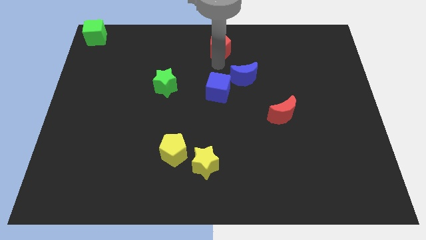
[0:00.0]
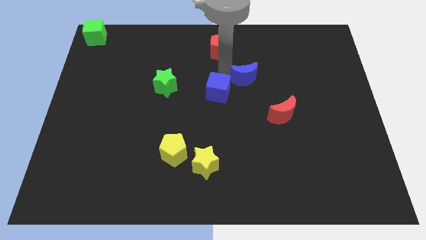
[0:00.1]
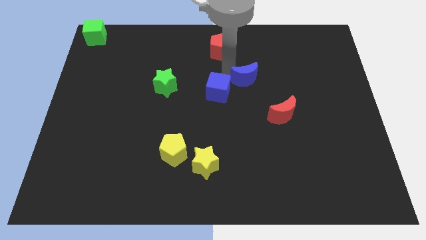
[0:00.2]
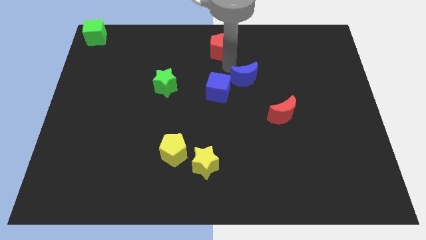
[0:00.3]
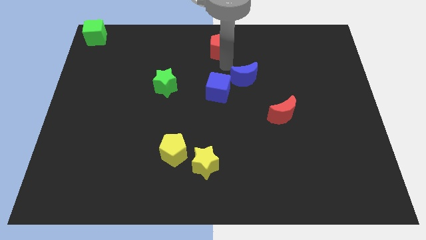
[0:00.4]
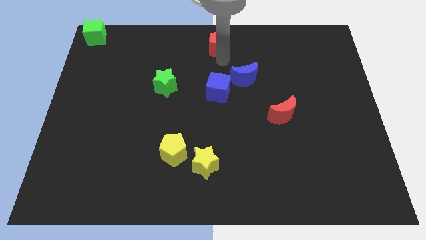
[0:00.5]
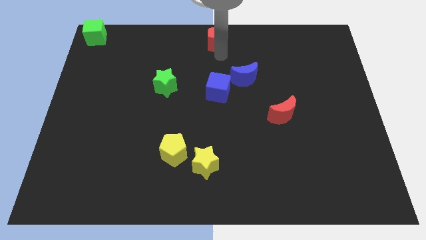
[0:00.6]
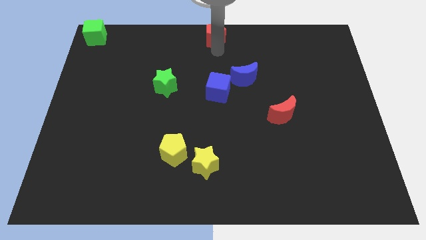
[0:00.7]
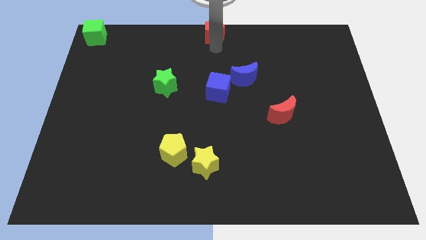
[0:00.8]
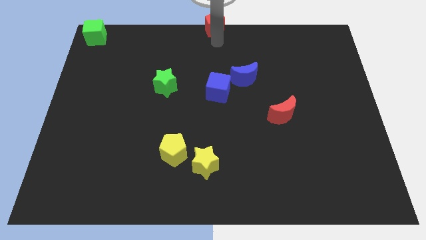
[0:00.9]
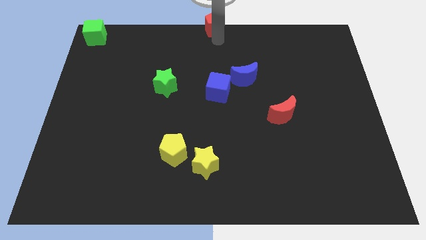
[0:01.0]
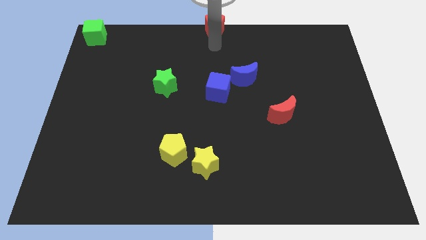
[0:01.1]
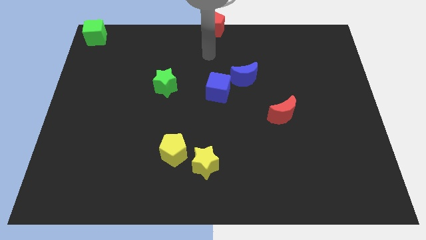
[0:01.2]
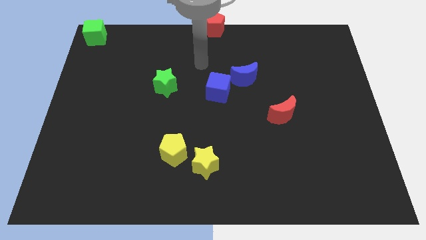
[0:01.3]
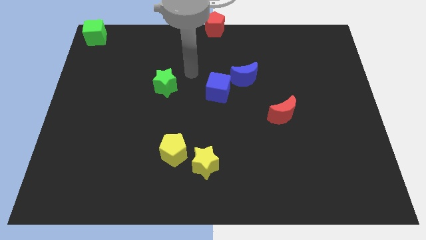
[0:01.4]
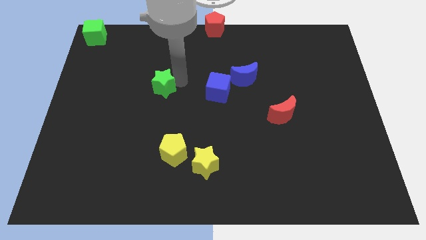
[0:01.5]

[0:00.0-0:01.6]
place the red pentagon in the top middle

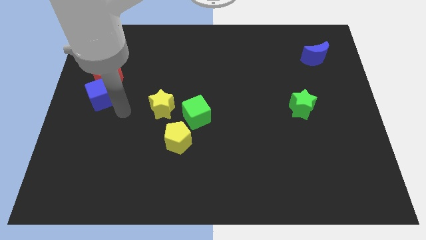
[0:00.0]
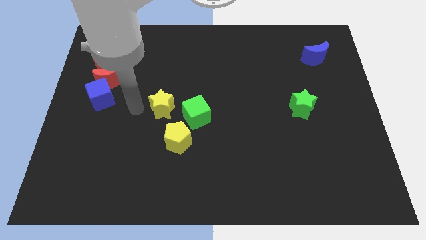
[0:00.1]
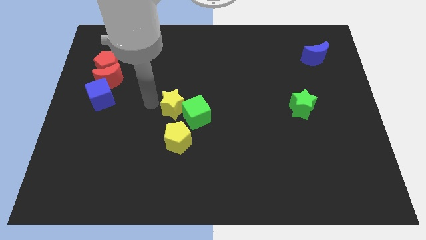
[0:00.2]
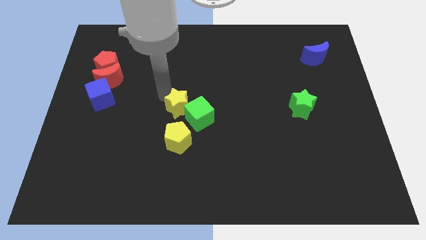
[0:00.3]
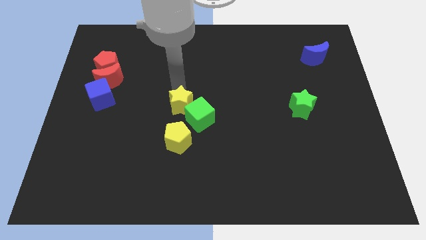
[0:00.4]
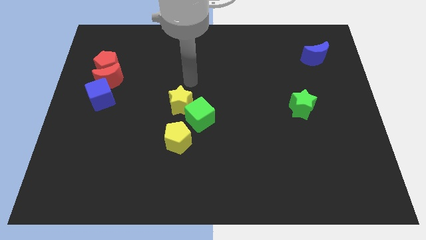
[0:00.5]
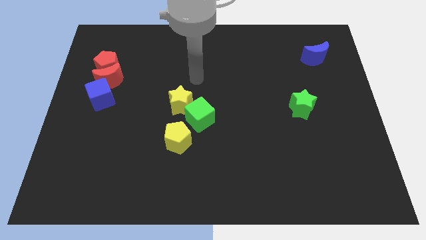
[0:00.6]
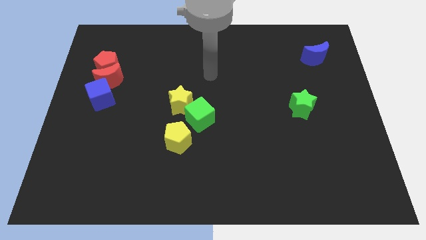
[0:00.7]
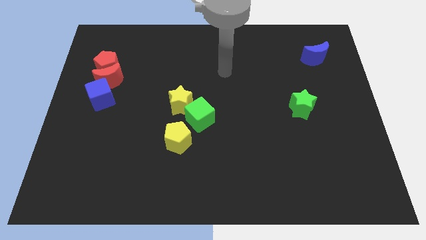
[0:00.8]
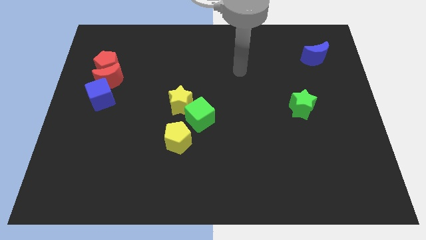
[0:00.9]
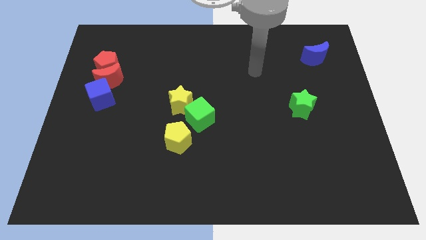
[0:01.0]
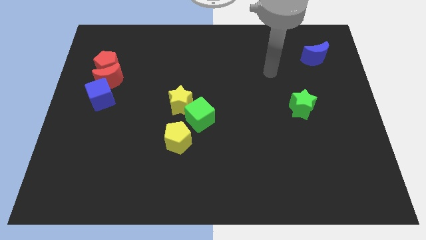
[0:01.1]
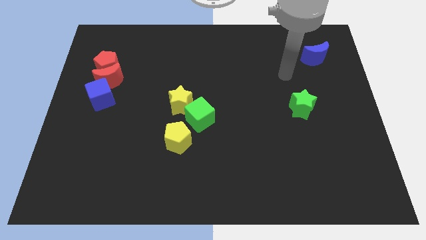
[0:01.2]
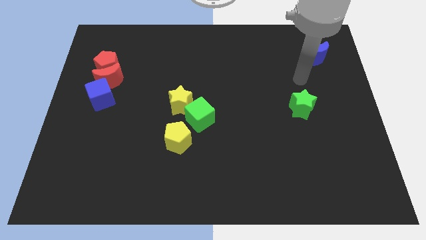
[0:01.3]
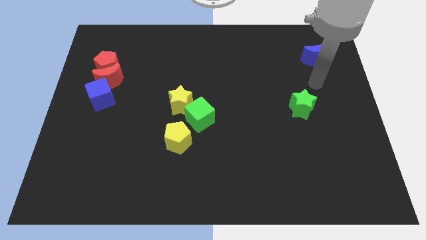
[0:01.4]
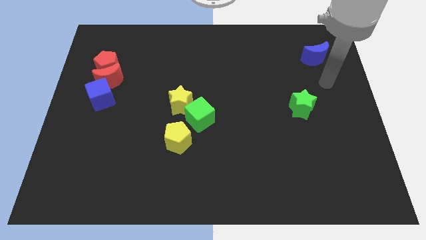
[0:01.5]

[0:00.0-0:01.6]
move your arm away from the blue block

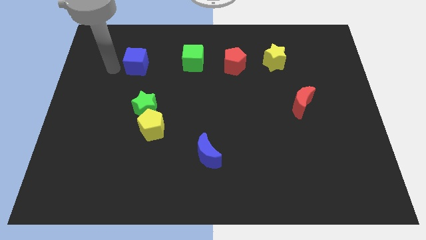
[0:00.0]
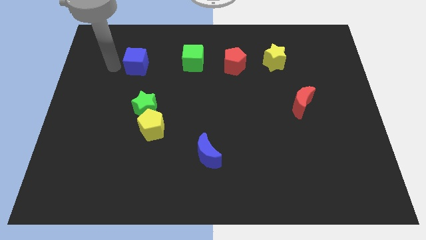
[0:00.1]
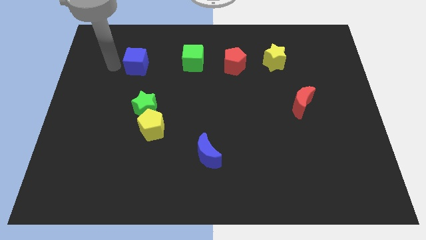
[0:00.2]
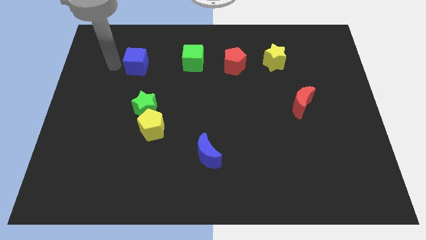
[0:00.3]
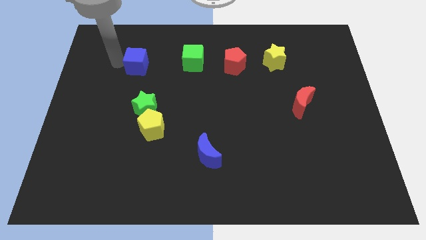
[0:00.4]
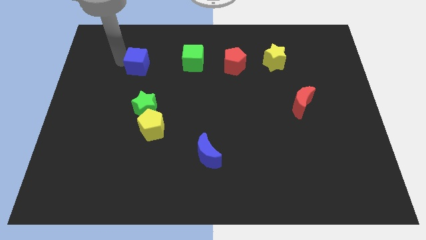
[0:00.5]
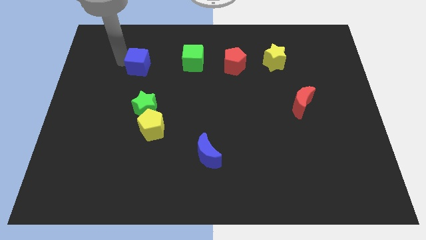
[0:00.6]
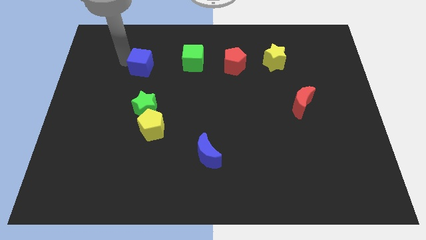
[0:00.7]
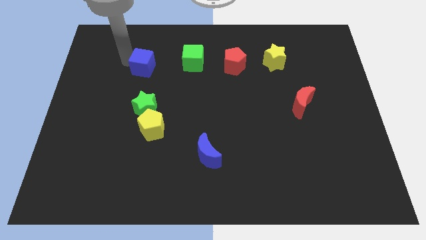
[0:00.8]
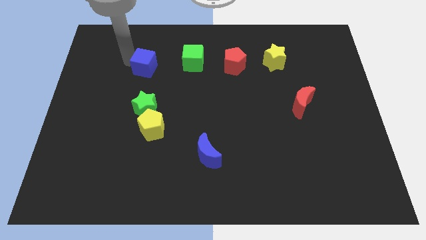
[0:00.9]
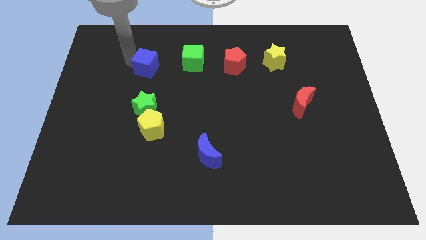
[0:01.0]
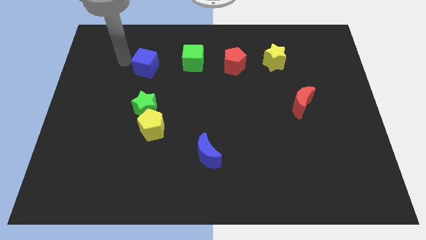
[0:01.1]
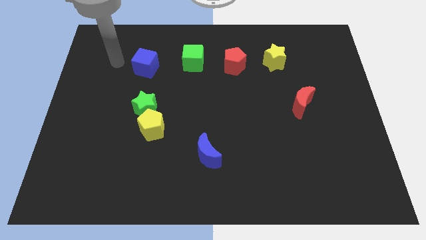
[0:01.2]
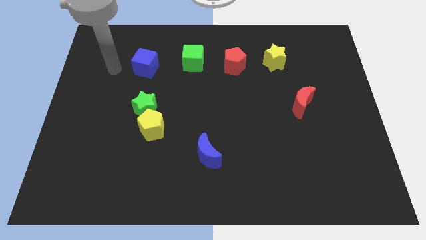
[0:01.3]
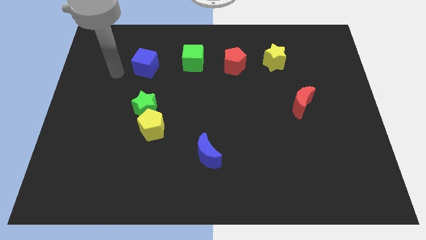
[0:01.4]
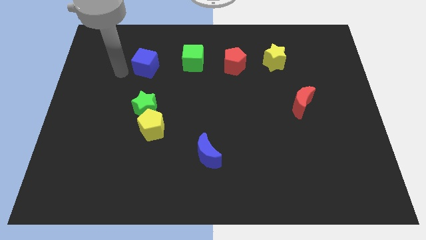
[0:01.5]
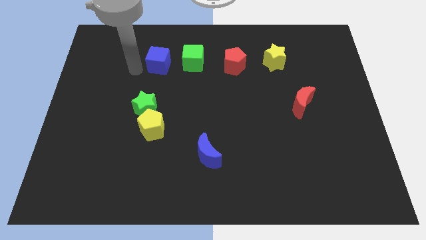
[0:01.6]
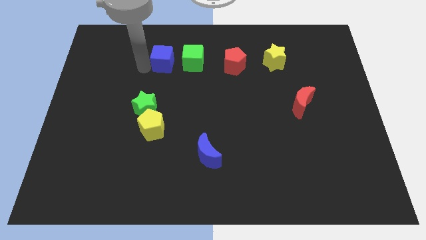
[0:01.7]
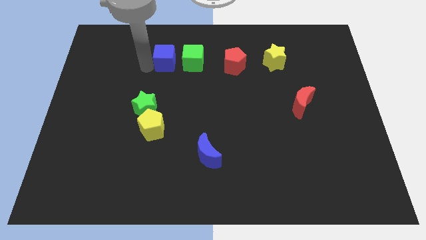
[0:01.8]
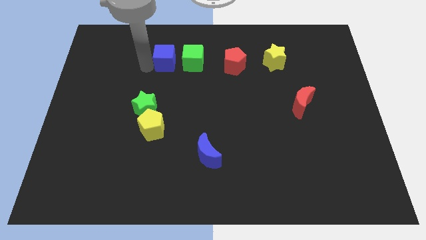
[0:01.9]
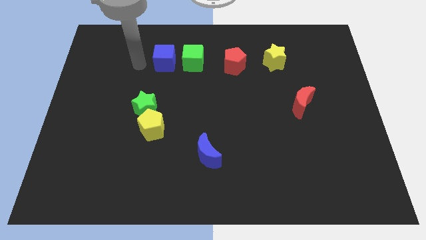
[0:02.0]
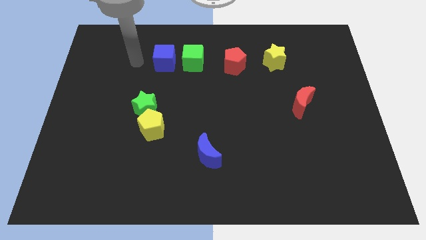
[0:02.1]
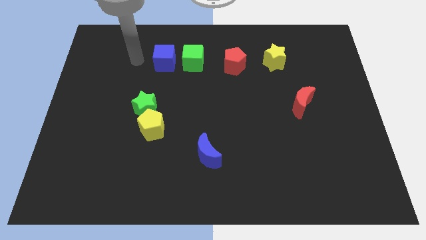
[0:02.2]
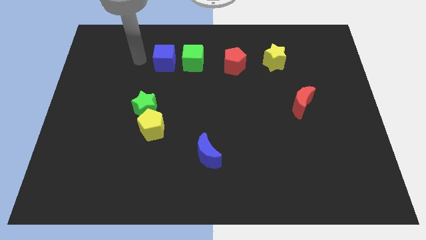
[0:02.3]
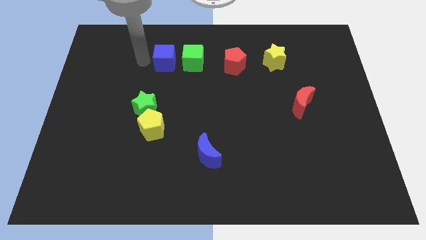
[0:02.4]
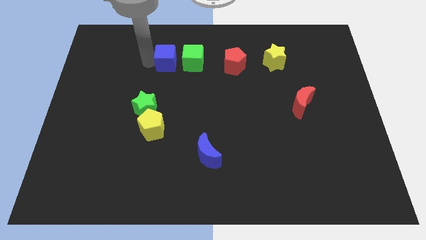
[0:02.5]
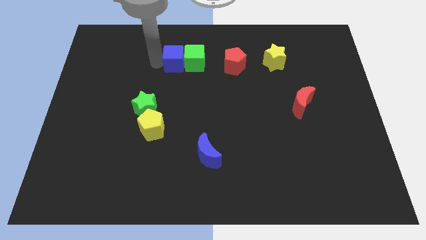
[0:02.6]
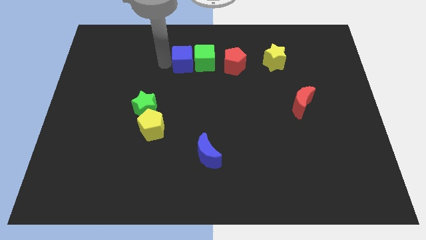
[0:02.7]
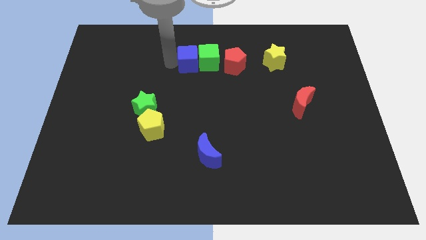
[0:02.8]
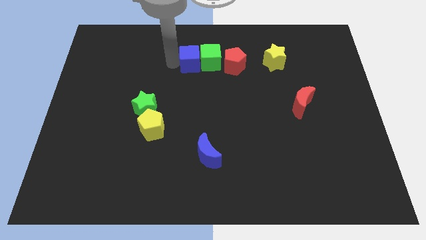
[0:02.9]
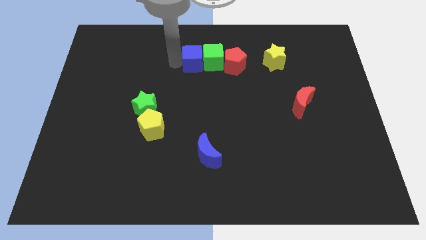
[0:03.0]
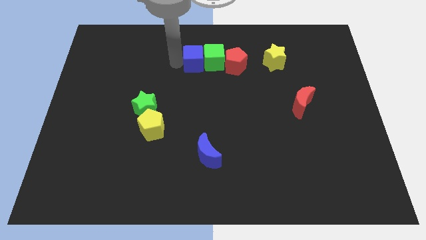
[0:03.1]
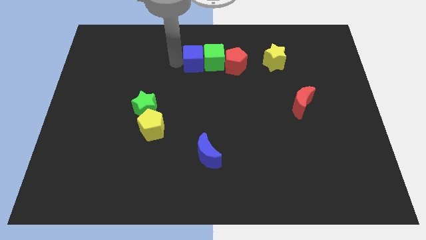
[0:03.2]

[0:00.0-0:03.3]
push the blue cube into the green cube

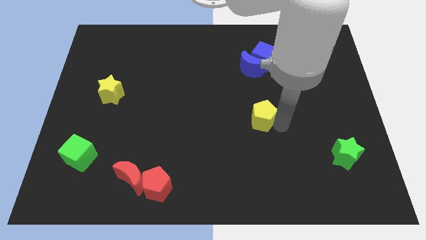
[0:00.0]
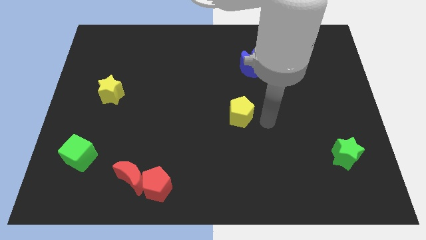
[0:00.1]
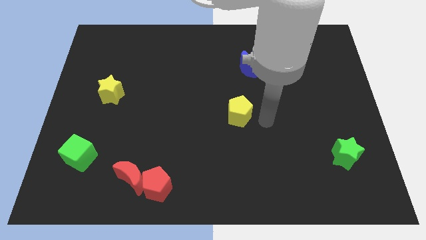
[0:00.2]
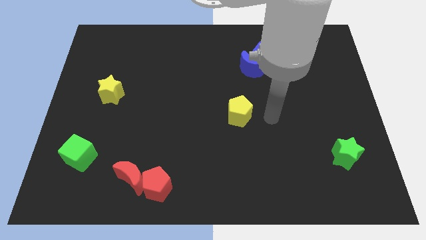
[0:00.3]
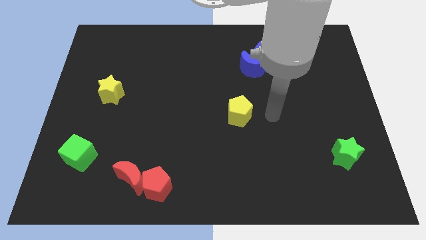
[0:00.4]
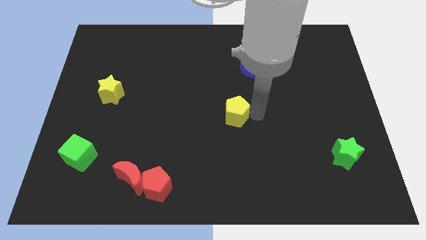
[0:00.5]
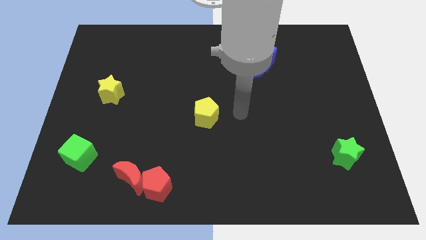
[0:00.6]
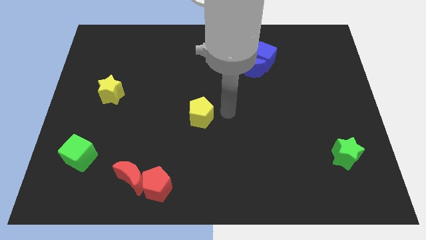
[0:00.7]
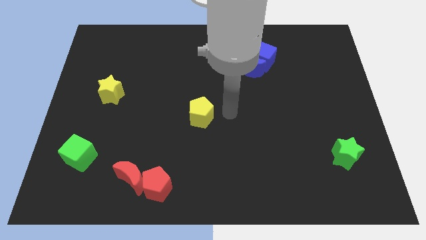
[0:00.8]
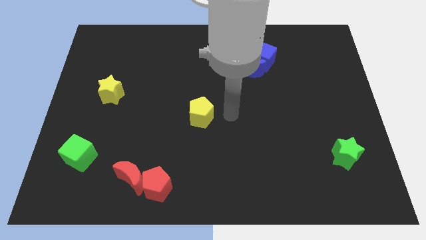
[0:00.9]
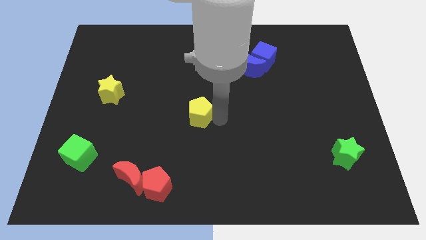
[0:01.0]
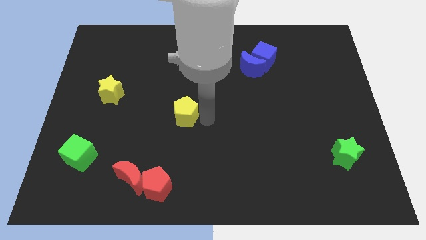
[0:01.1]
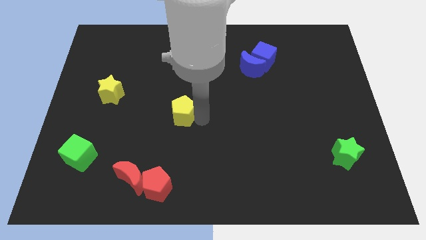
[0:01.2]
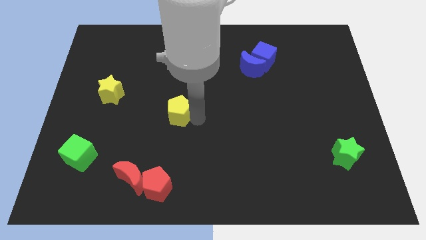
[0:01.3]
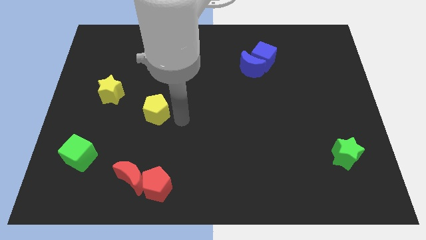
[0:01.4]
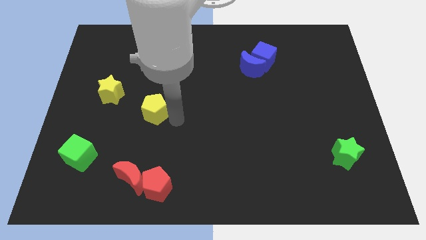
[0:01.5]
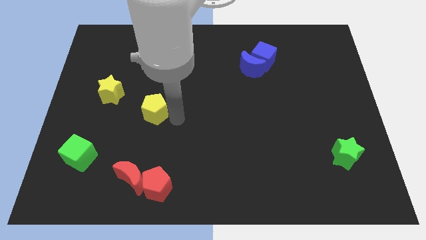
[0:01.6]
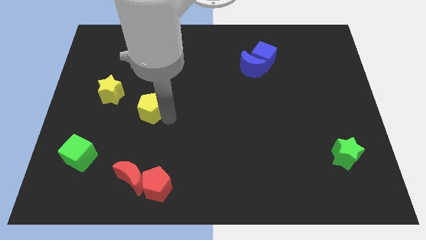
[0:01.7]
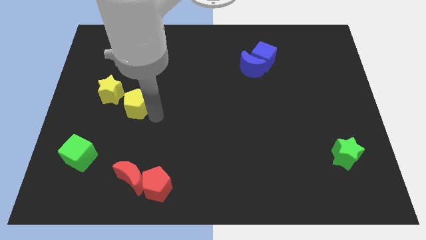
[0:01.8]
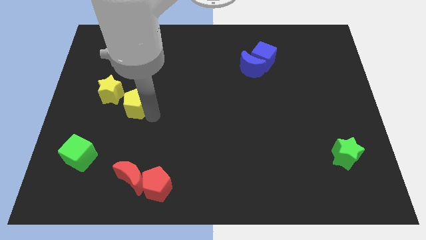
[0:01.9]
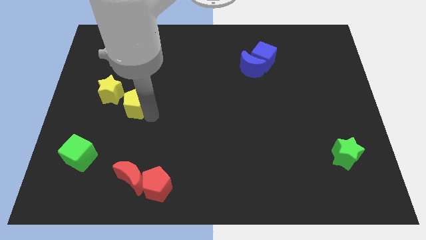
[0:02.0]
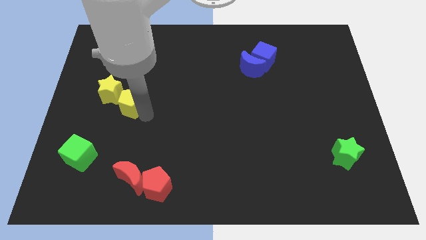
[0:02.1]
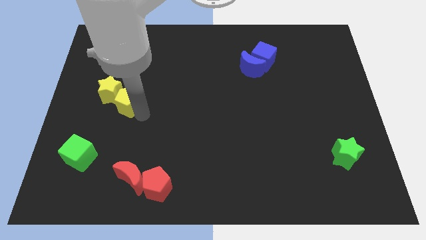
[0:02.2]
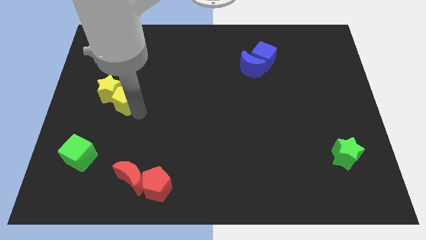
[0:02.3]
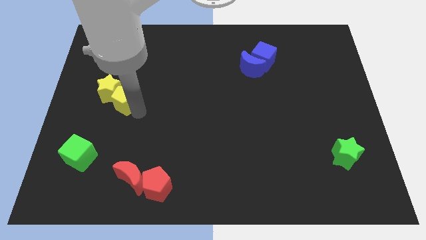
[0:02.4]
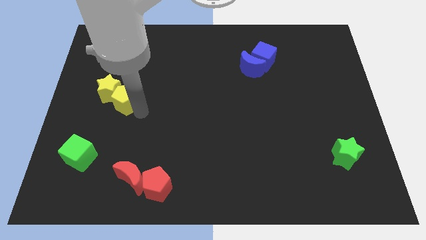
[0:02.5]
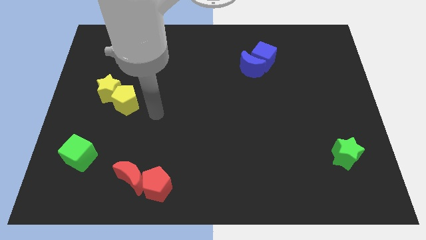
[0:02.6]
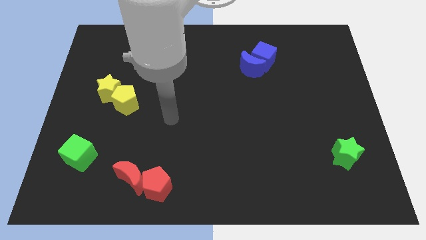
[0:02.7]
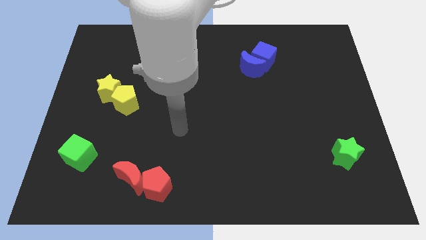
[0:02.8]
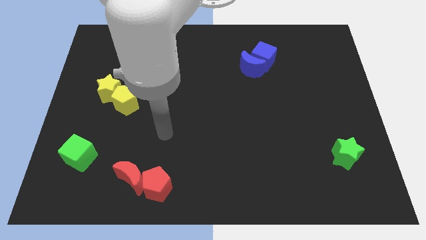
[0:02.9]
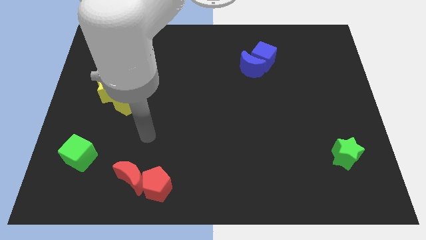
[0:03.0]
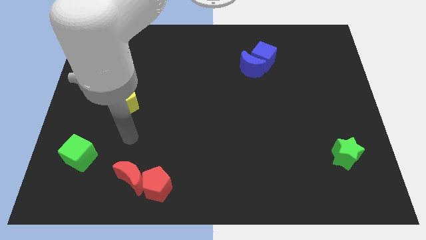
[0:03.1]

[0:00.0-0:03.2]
move the yellow pentagon into the yellow star
